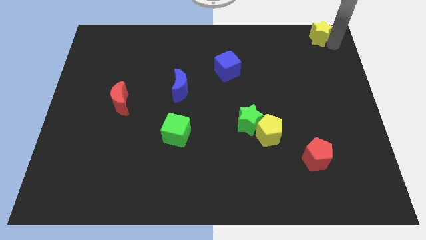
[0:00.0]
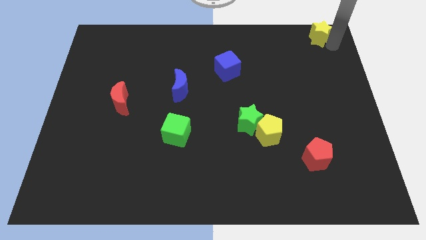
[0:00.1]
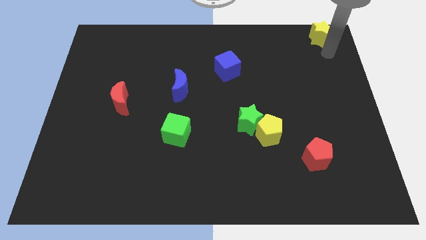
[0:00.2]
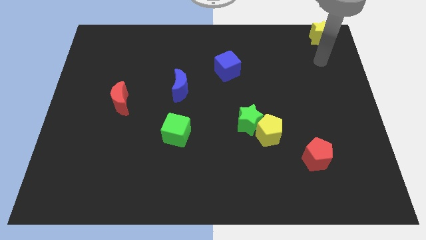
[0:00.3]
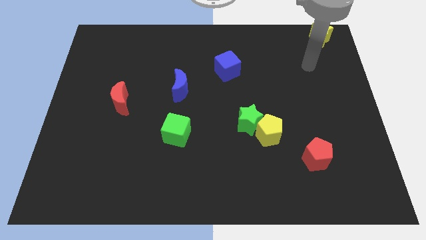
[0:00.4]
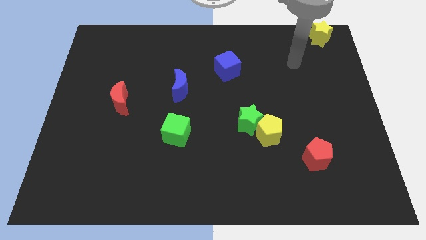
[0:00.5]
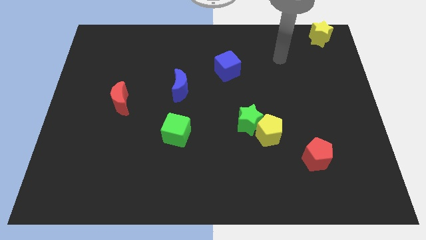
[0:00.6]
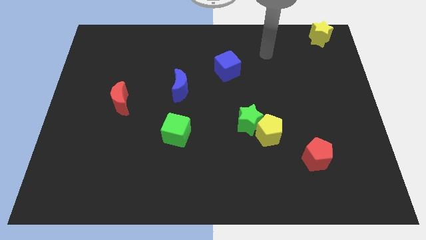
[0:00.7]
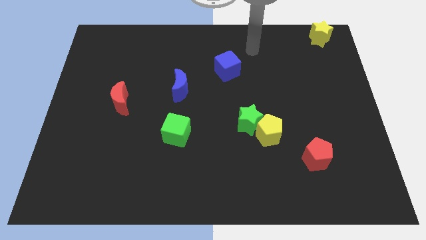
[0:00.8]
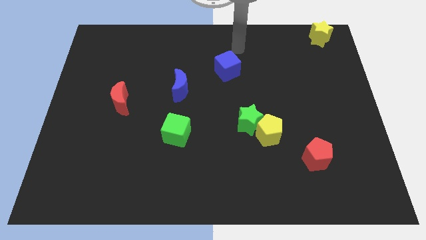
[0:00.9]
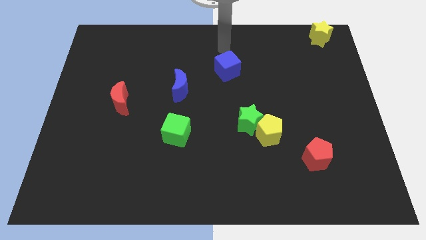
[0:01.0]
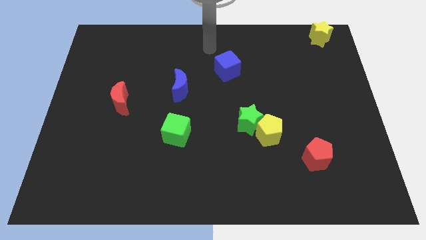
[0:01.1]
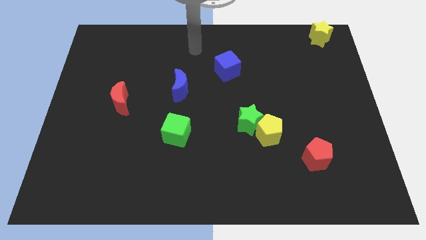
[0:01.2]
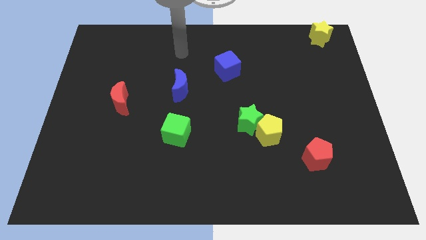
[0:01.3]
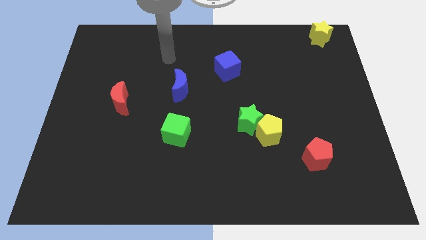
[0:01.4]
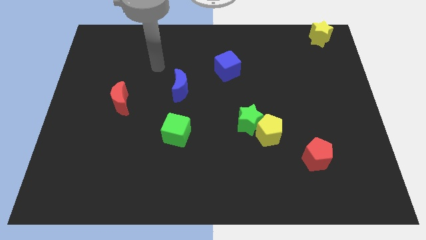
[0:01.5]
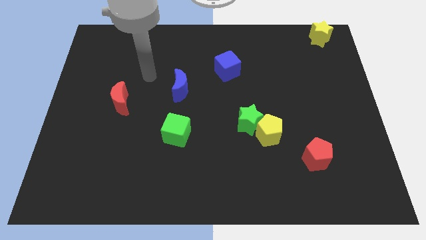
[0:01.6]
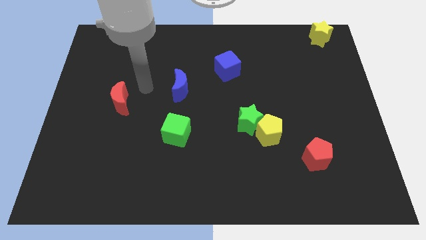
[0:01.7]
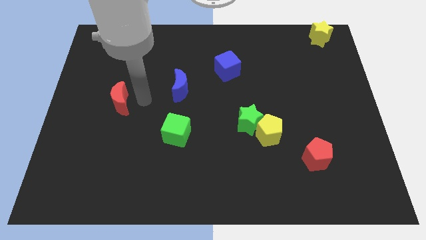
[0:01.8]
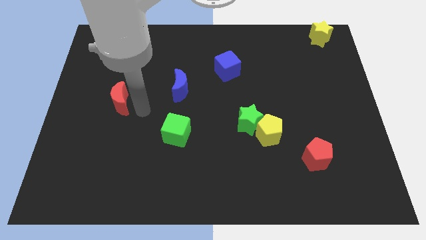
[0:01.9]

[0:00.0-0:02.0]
move your arm away from yellow star

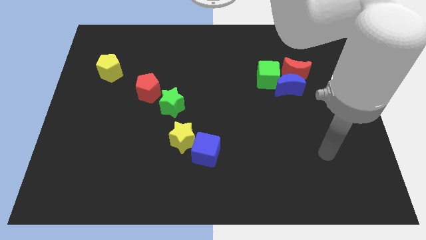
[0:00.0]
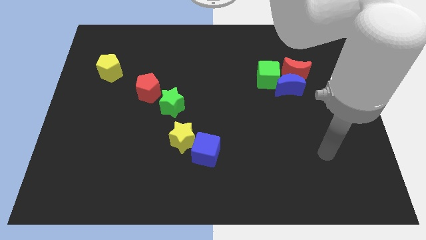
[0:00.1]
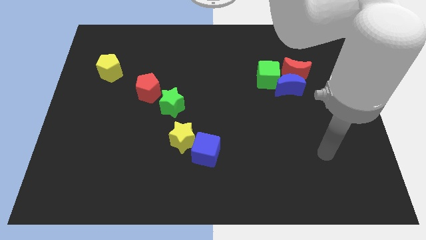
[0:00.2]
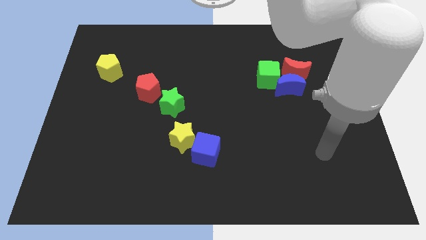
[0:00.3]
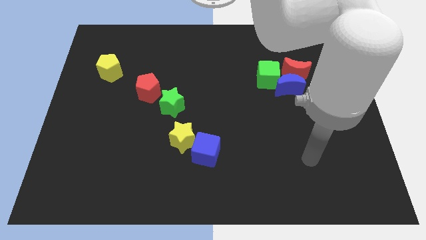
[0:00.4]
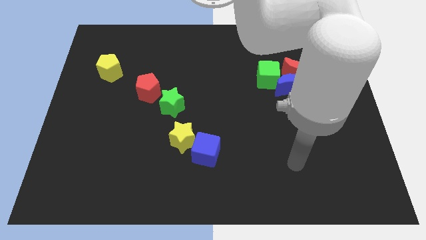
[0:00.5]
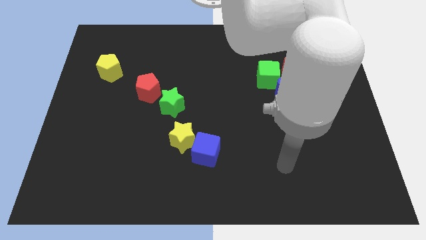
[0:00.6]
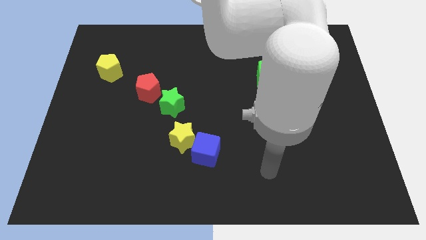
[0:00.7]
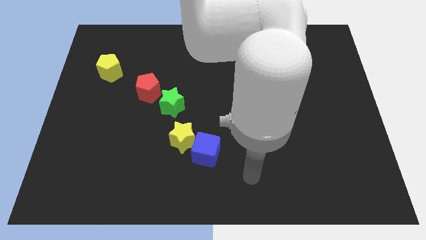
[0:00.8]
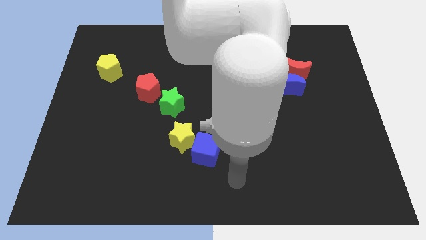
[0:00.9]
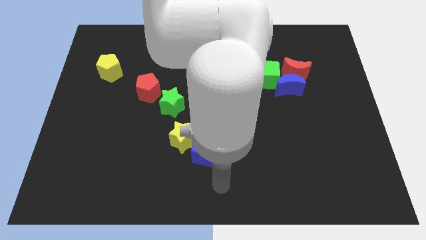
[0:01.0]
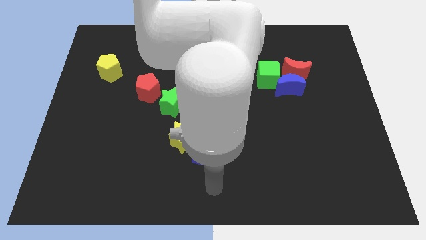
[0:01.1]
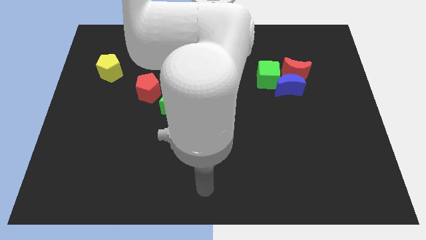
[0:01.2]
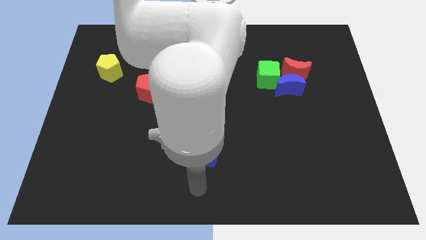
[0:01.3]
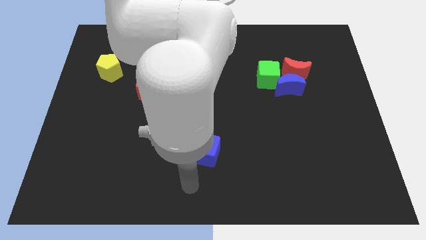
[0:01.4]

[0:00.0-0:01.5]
place the arm below the blue cube

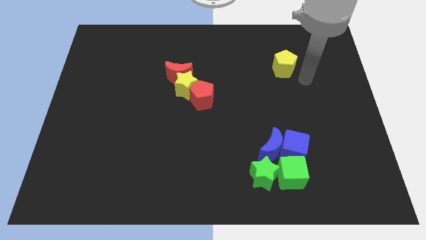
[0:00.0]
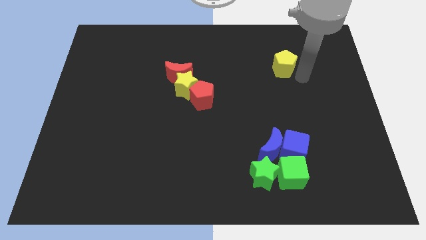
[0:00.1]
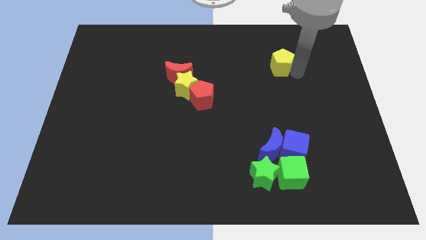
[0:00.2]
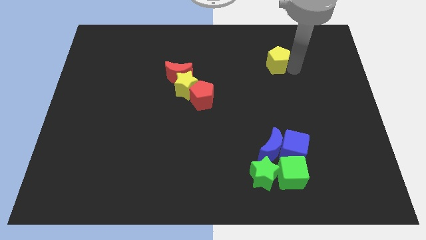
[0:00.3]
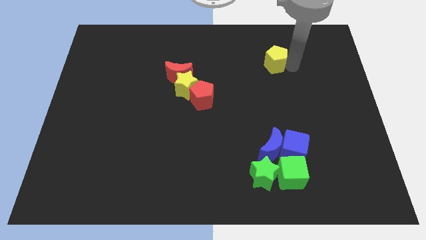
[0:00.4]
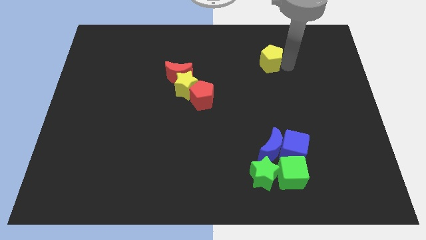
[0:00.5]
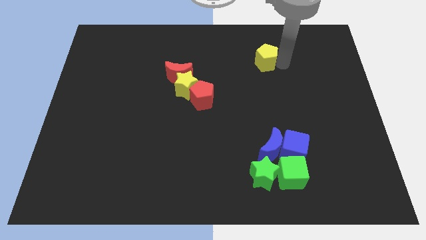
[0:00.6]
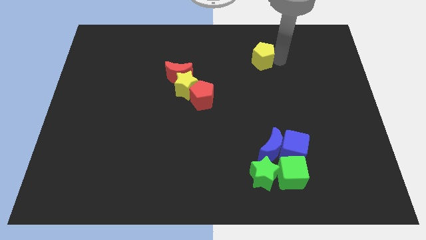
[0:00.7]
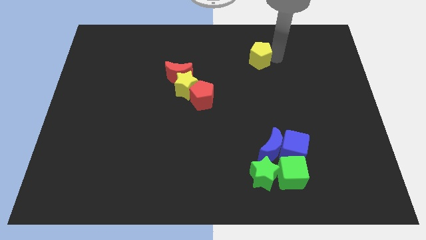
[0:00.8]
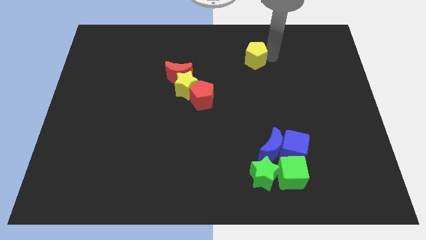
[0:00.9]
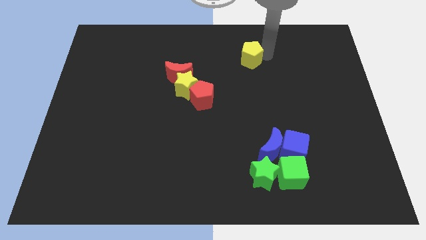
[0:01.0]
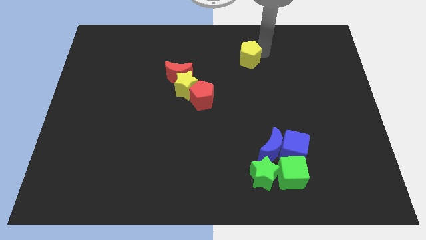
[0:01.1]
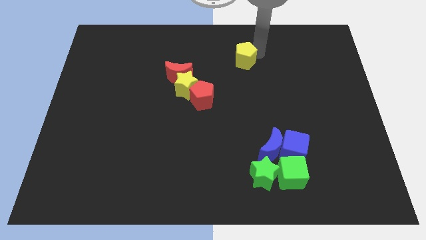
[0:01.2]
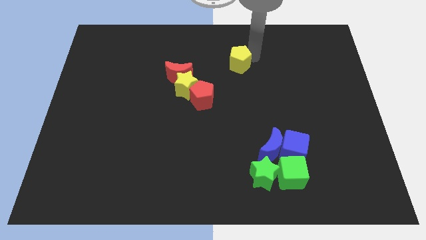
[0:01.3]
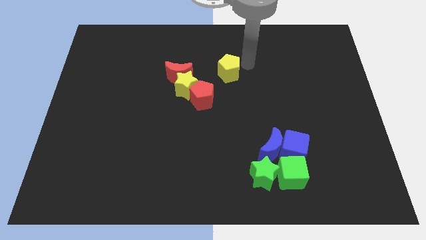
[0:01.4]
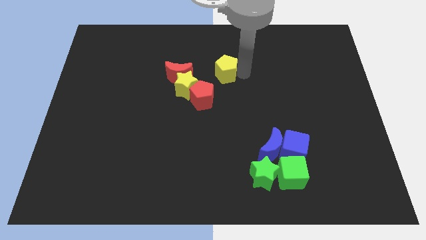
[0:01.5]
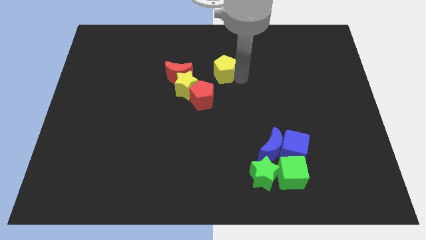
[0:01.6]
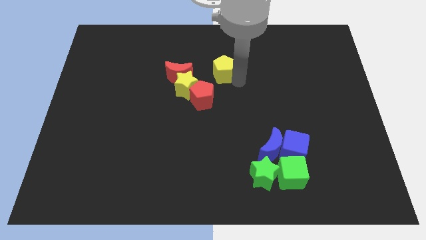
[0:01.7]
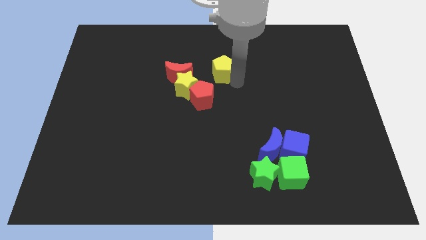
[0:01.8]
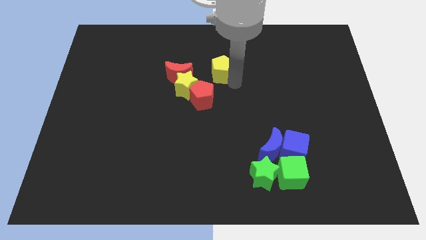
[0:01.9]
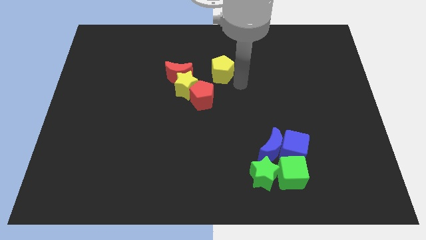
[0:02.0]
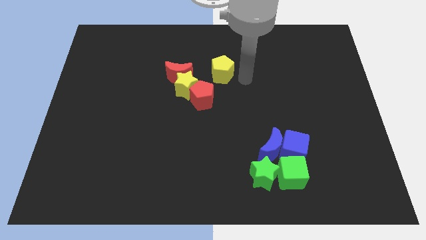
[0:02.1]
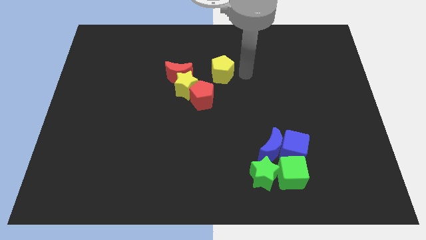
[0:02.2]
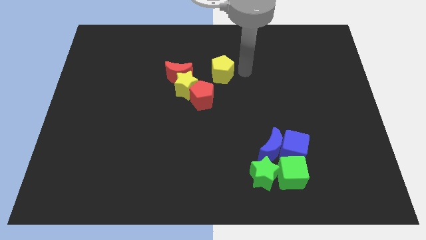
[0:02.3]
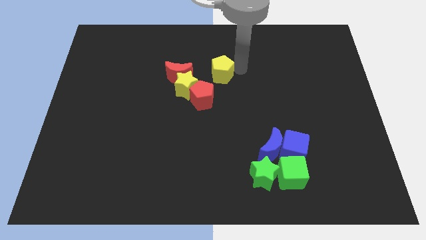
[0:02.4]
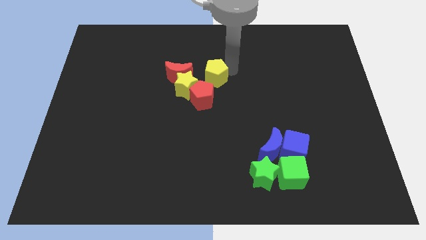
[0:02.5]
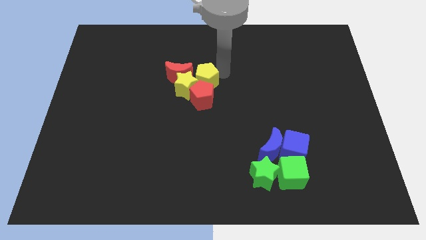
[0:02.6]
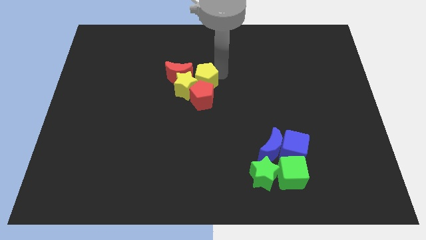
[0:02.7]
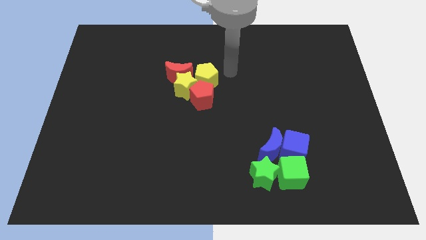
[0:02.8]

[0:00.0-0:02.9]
move the yellow pentagon at the top of the red pentagon

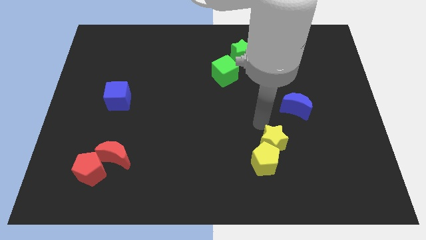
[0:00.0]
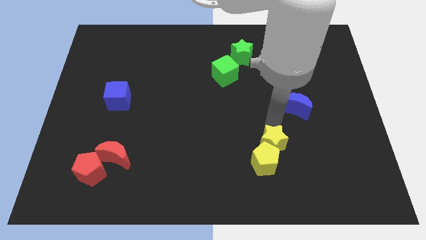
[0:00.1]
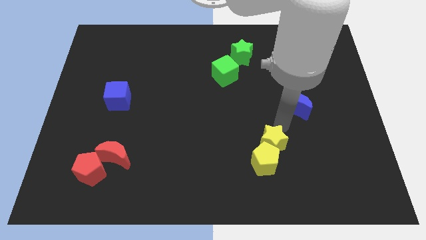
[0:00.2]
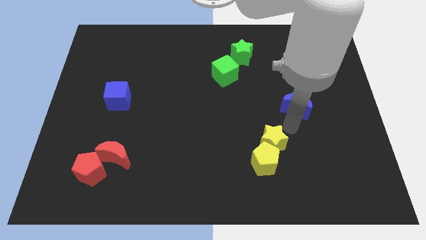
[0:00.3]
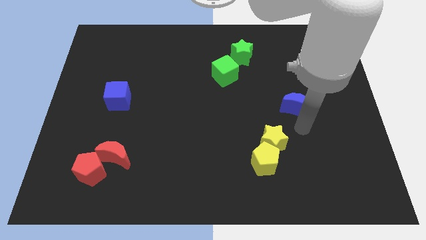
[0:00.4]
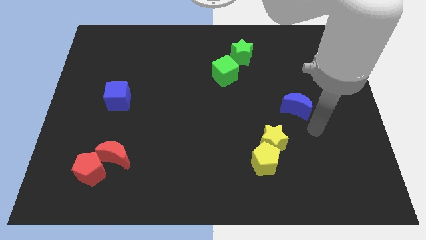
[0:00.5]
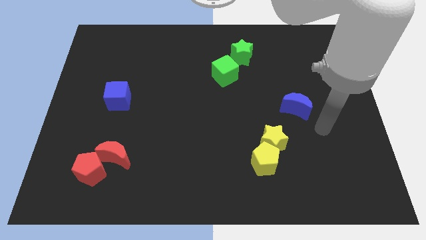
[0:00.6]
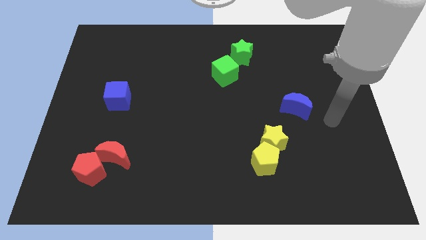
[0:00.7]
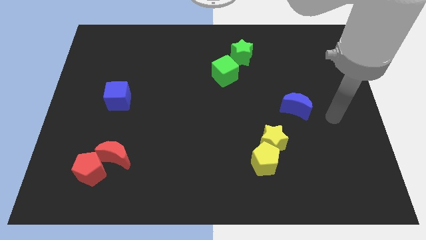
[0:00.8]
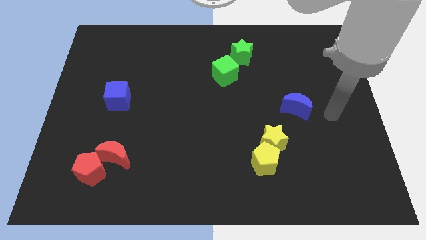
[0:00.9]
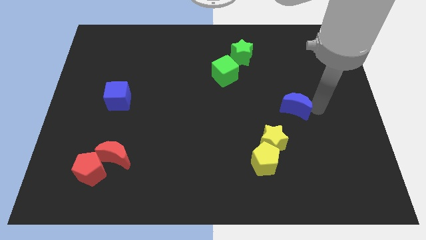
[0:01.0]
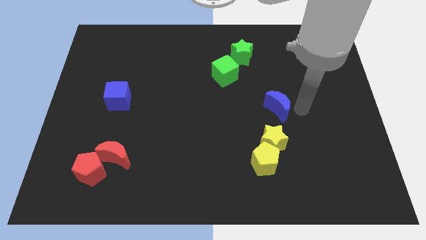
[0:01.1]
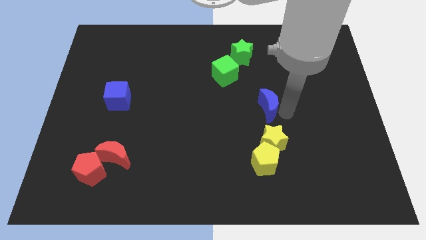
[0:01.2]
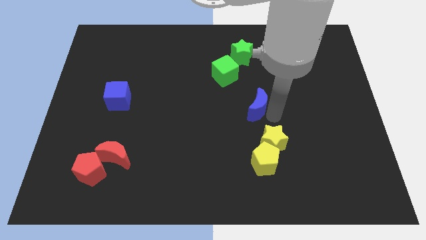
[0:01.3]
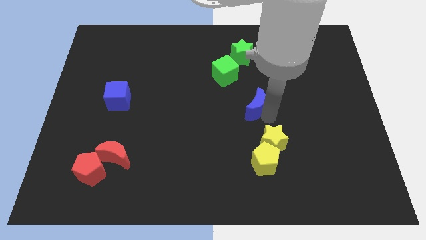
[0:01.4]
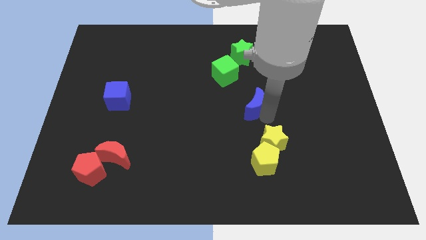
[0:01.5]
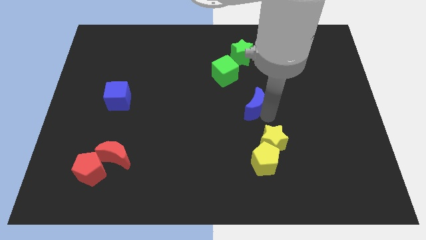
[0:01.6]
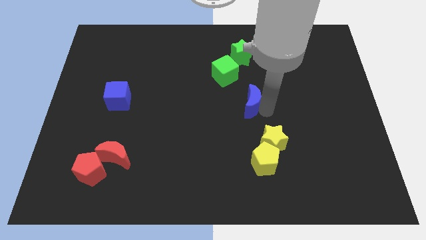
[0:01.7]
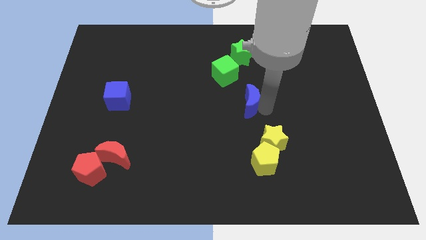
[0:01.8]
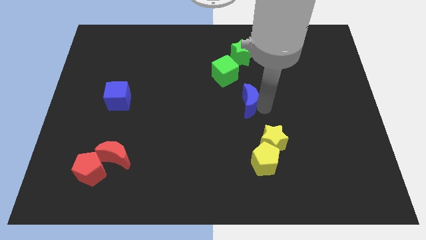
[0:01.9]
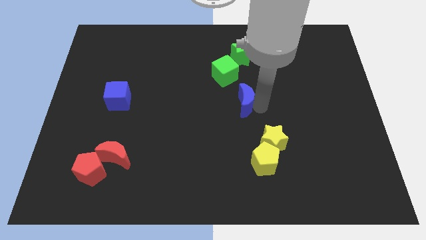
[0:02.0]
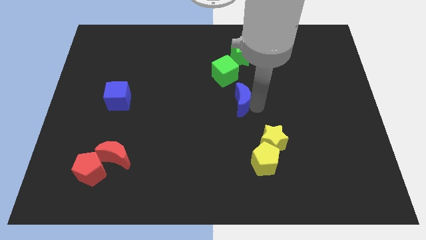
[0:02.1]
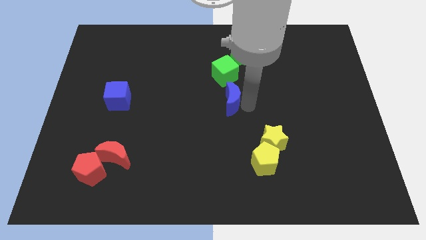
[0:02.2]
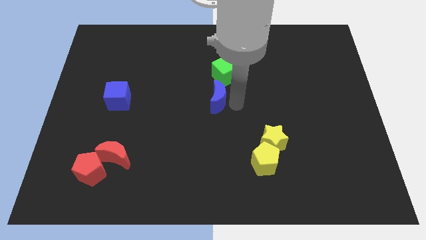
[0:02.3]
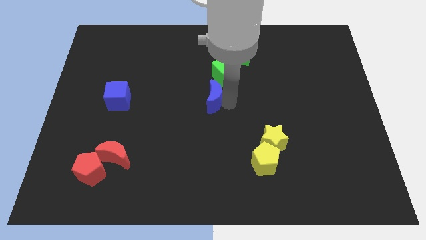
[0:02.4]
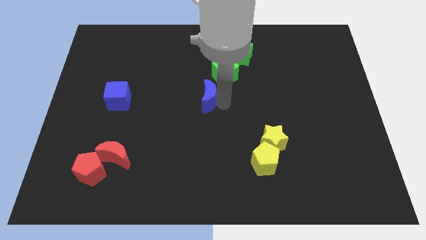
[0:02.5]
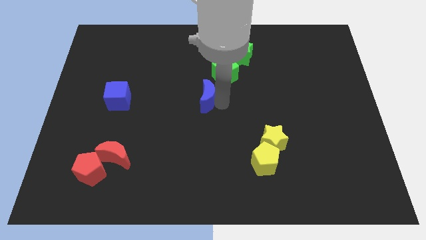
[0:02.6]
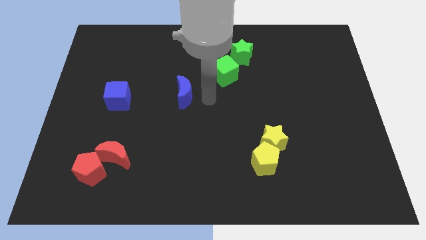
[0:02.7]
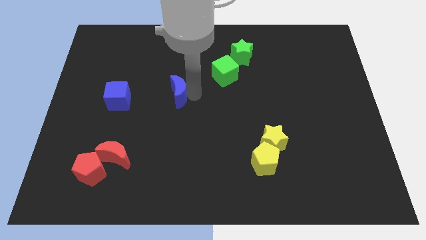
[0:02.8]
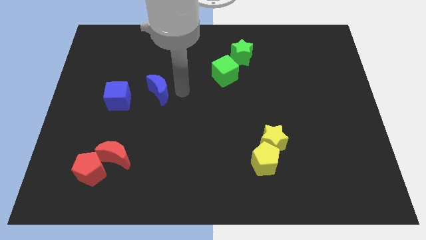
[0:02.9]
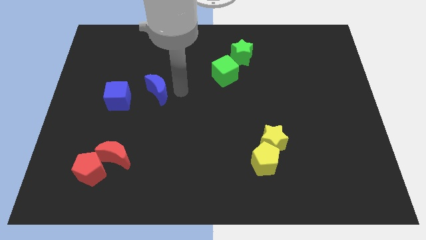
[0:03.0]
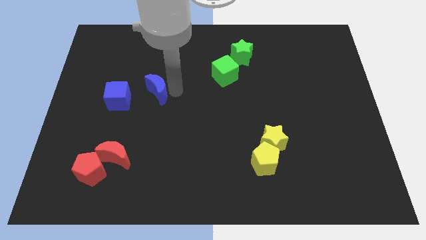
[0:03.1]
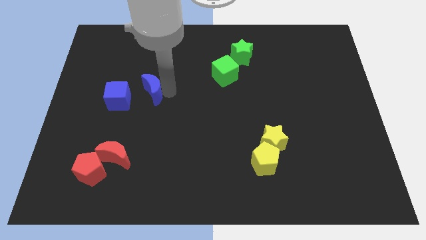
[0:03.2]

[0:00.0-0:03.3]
move blue crescent towards blue cube
